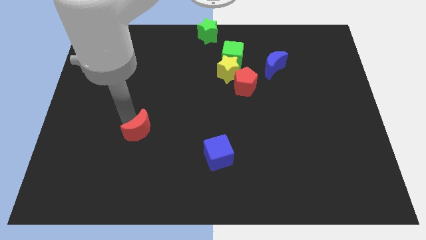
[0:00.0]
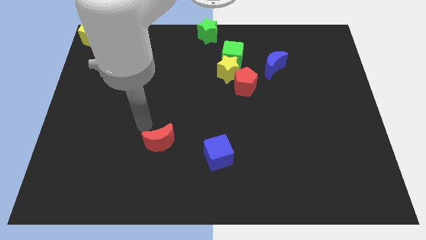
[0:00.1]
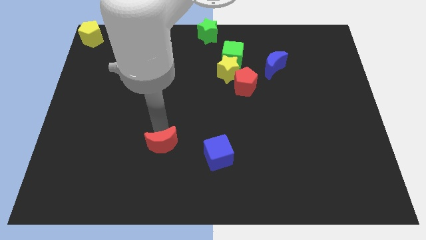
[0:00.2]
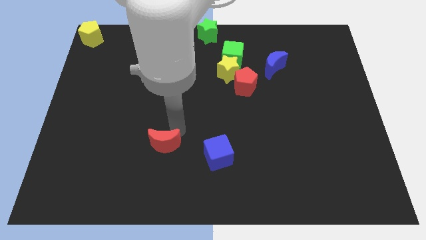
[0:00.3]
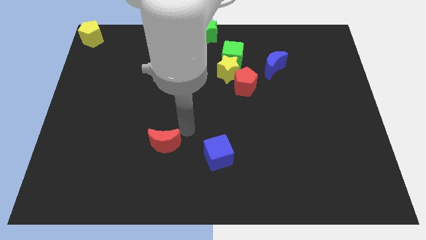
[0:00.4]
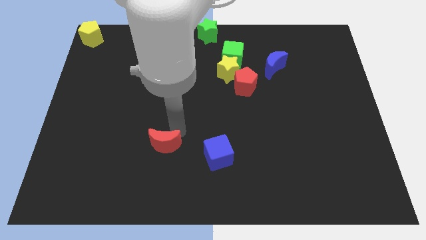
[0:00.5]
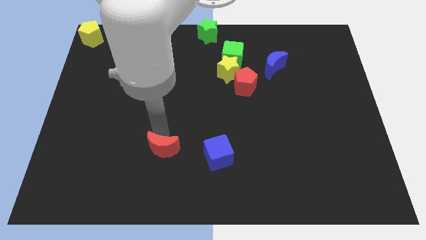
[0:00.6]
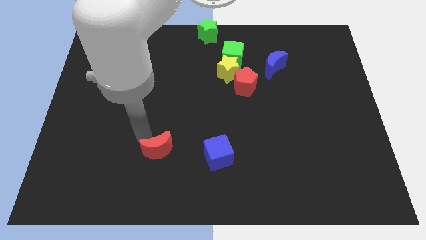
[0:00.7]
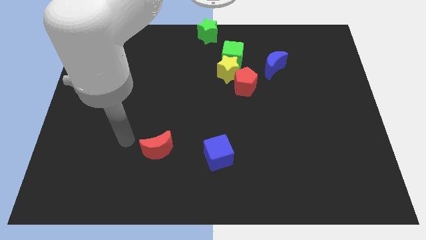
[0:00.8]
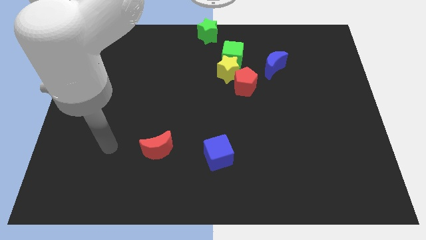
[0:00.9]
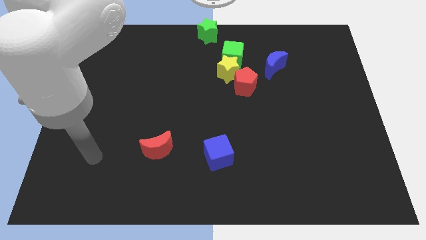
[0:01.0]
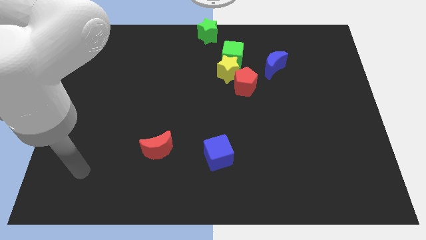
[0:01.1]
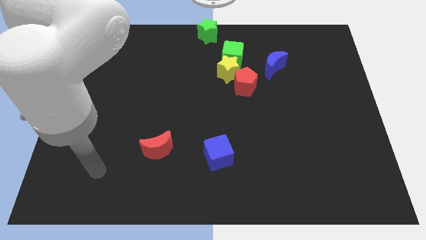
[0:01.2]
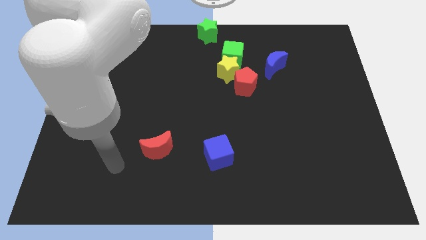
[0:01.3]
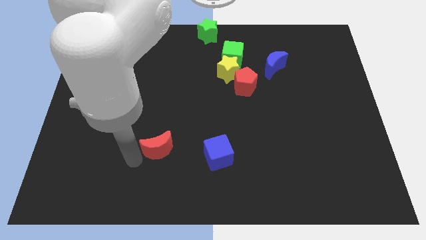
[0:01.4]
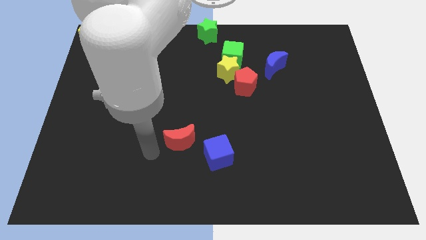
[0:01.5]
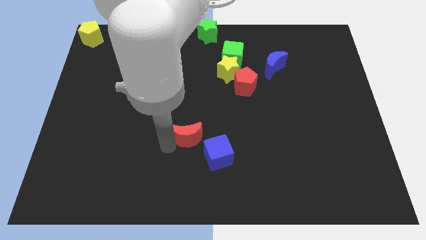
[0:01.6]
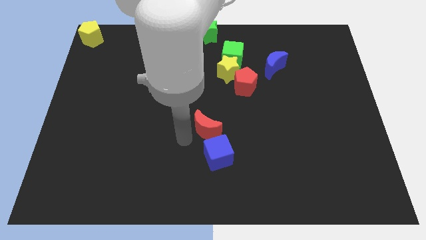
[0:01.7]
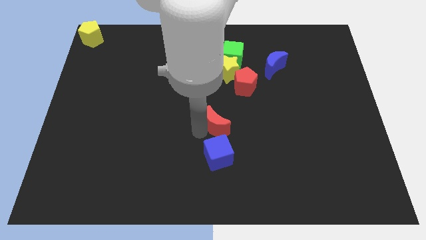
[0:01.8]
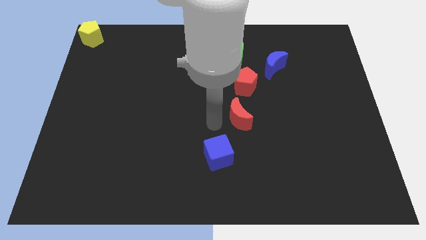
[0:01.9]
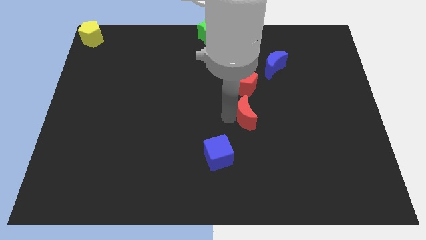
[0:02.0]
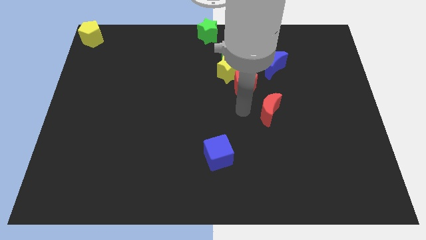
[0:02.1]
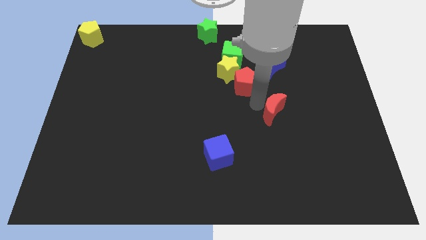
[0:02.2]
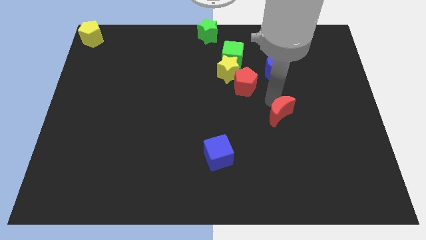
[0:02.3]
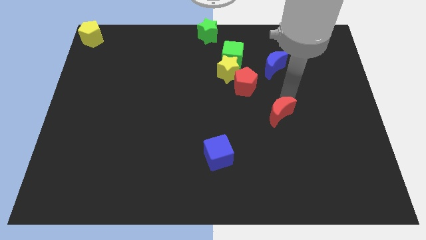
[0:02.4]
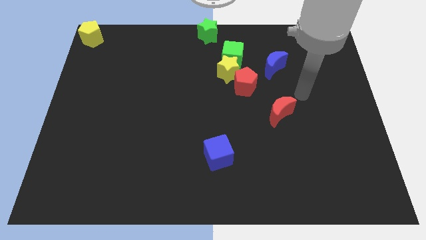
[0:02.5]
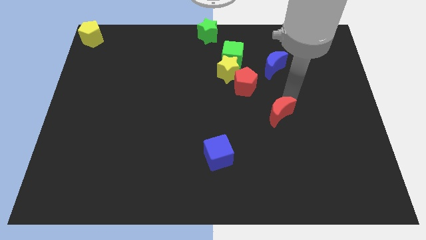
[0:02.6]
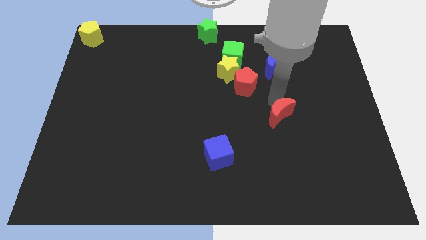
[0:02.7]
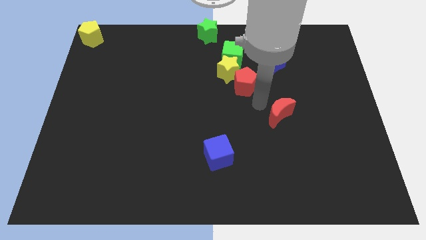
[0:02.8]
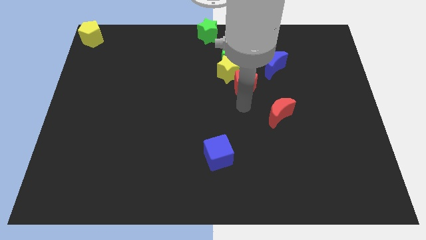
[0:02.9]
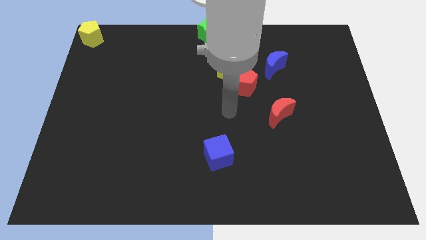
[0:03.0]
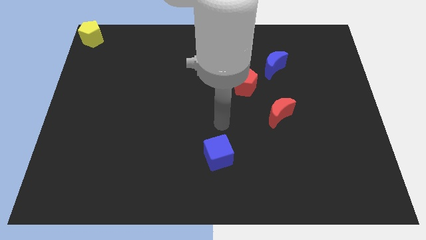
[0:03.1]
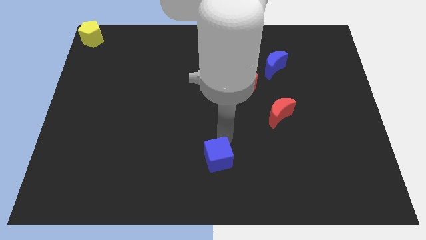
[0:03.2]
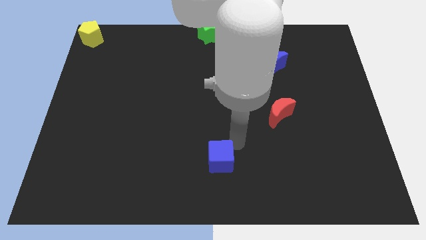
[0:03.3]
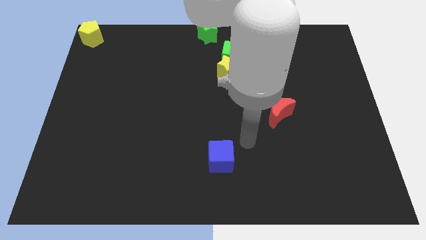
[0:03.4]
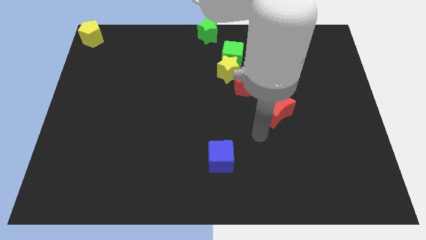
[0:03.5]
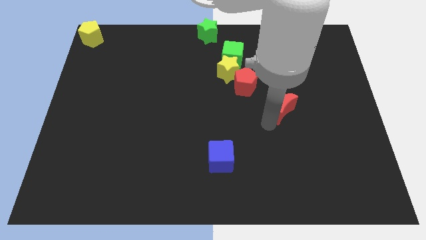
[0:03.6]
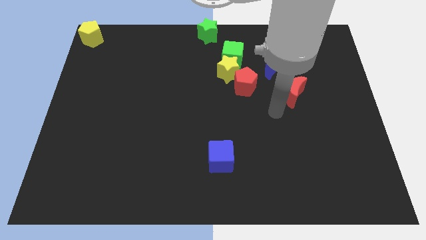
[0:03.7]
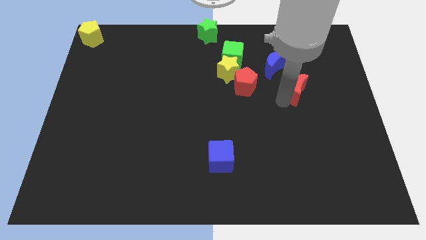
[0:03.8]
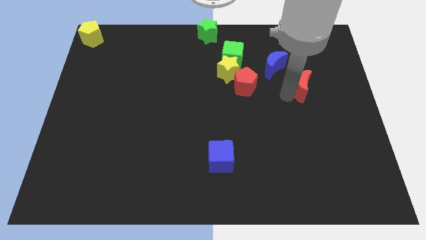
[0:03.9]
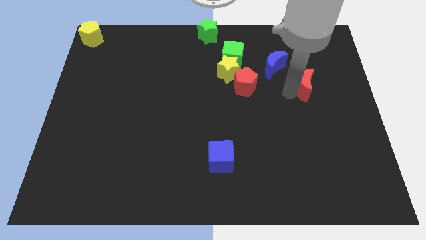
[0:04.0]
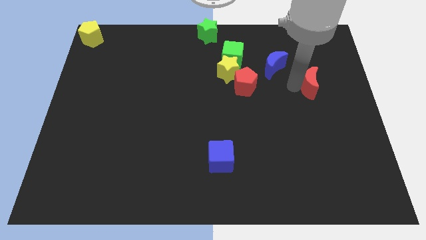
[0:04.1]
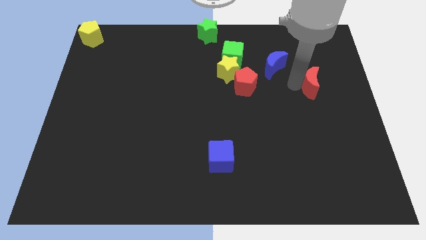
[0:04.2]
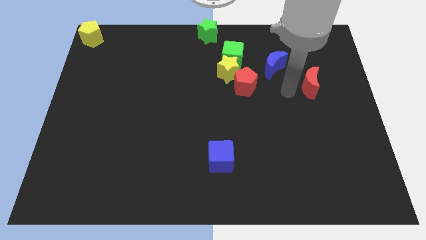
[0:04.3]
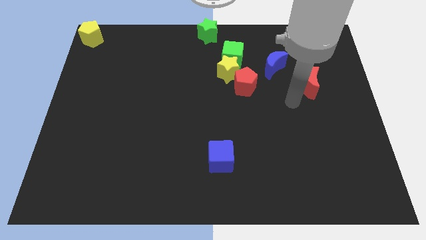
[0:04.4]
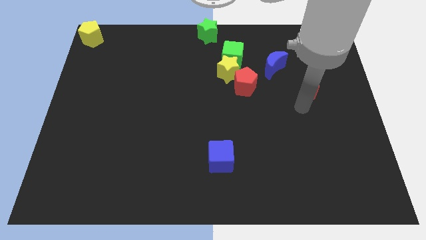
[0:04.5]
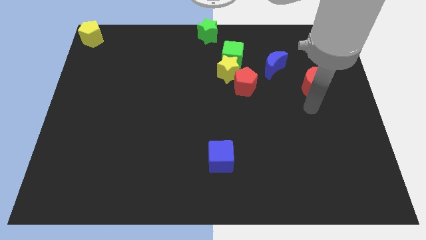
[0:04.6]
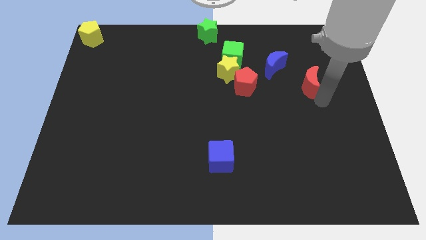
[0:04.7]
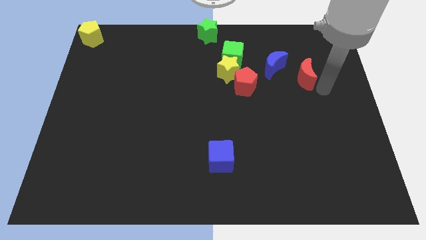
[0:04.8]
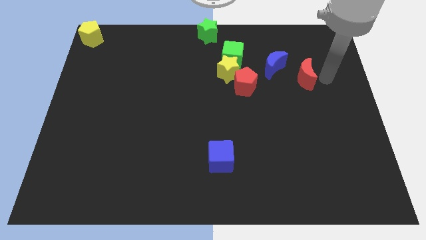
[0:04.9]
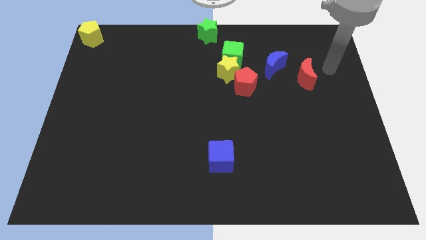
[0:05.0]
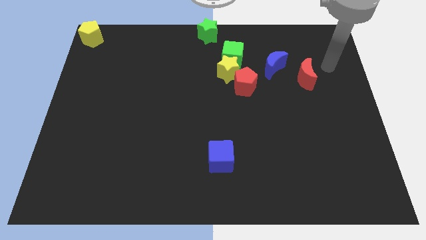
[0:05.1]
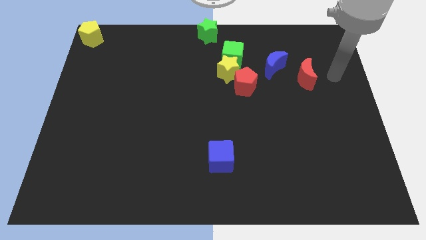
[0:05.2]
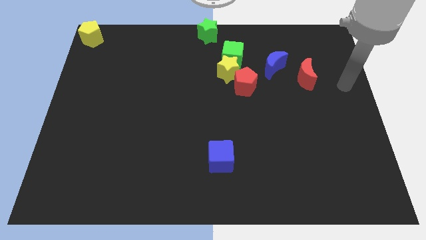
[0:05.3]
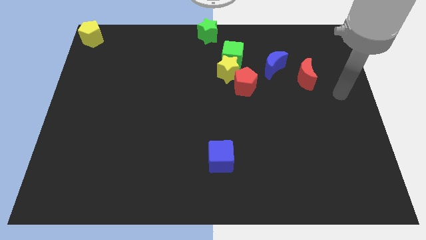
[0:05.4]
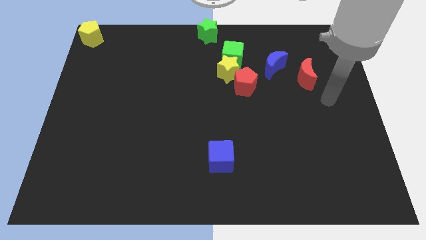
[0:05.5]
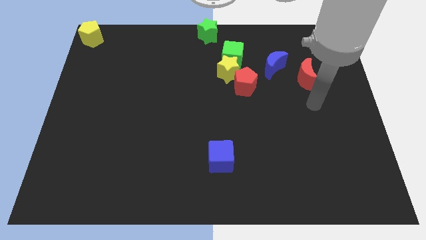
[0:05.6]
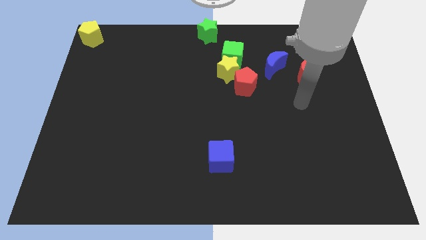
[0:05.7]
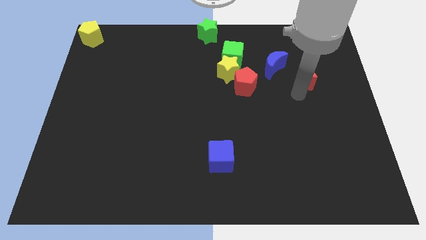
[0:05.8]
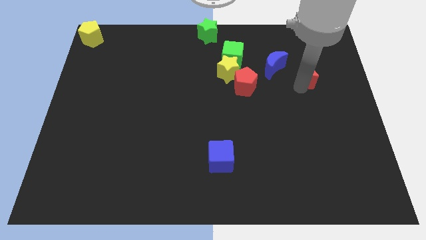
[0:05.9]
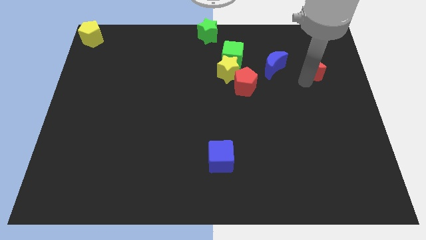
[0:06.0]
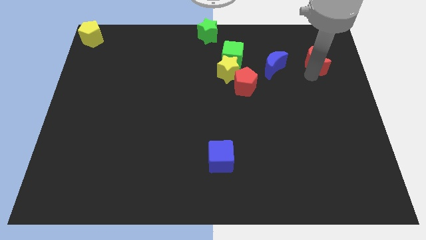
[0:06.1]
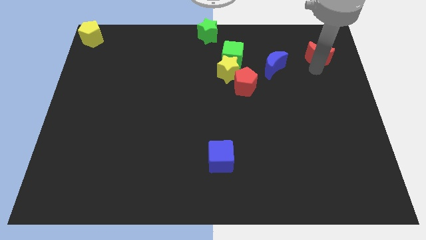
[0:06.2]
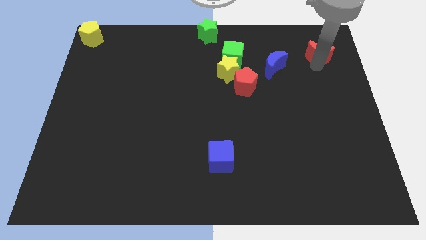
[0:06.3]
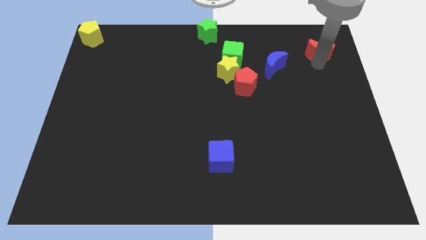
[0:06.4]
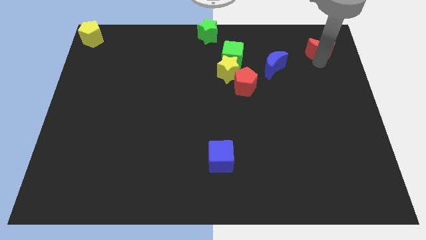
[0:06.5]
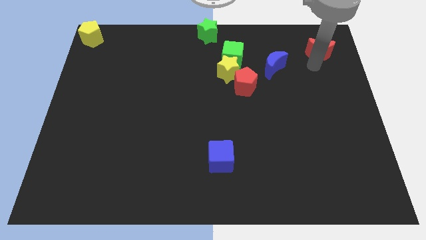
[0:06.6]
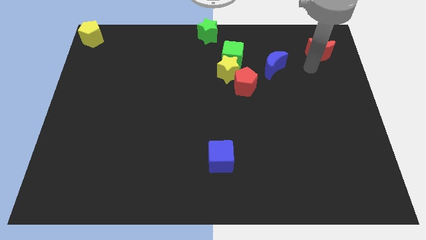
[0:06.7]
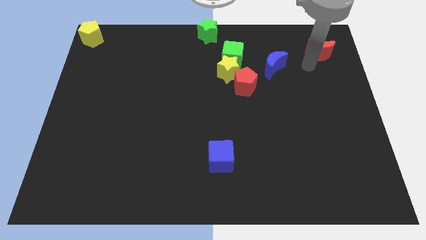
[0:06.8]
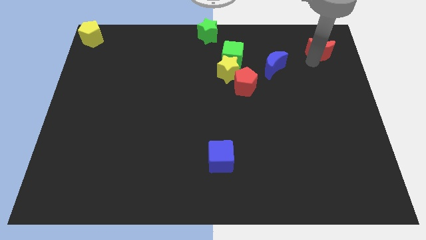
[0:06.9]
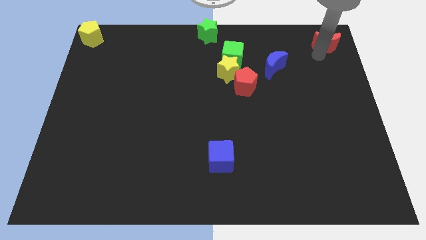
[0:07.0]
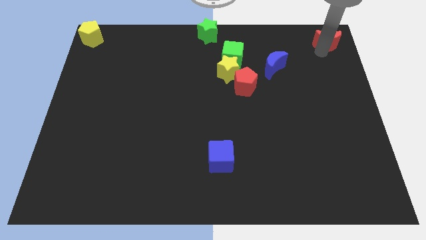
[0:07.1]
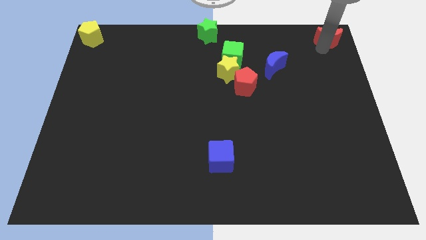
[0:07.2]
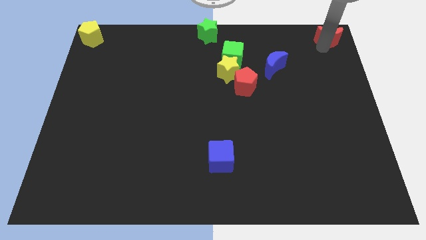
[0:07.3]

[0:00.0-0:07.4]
push the red crescent to the top right of the board

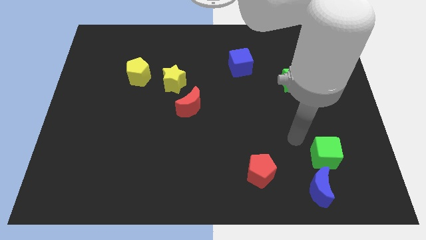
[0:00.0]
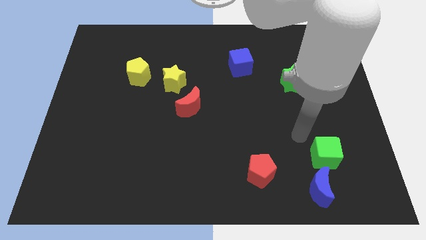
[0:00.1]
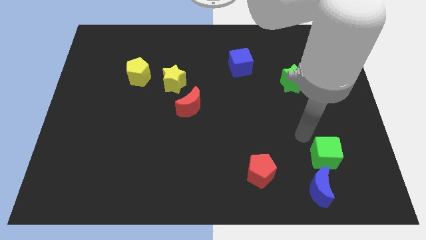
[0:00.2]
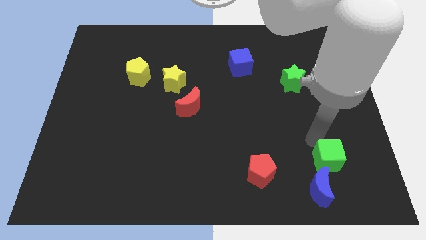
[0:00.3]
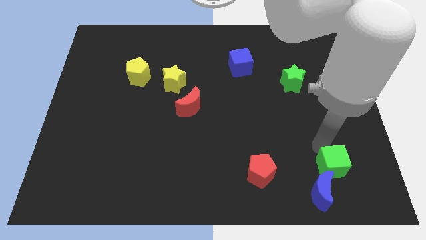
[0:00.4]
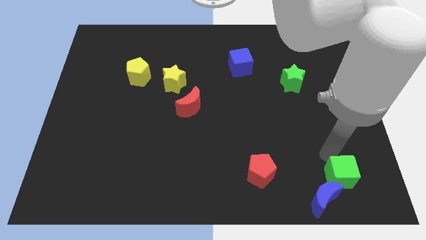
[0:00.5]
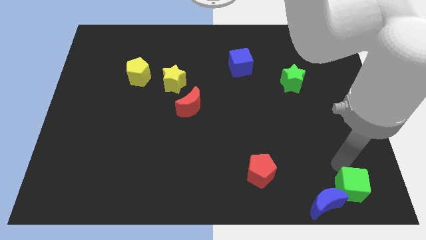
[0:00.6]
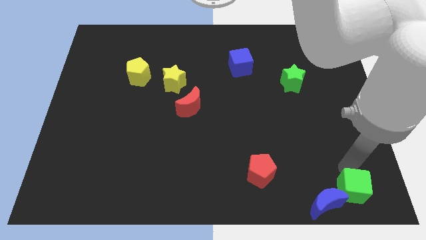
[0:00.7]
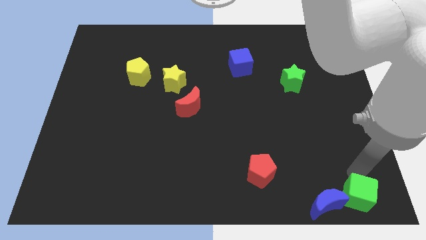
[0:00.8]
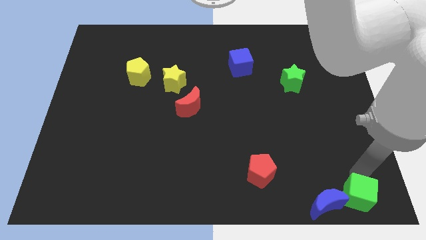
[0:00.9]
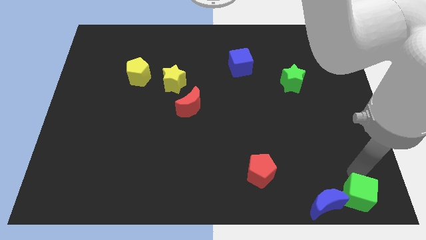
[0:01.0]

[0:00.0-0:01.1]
push the green cube in to the blue crescent

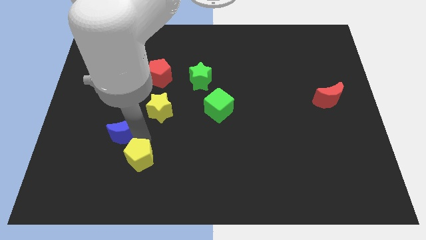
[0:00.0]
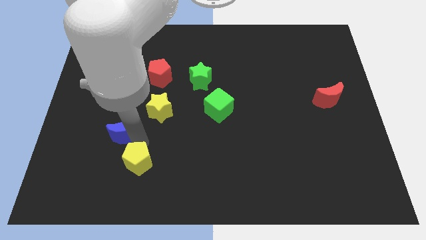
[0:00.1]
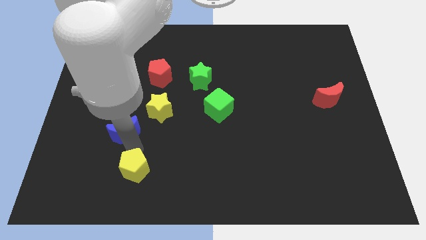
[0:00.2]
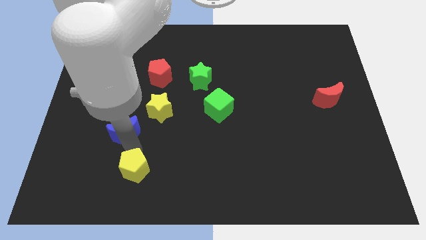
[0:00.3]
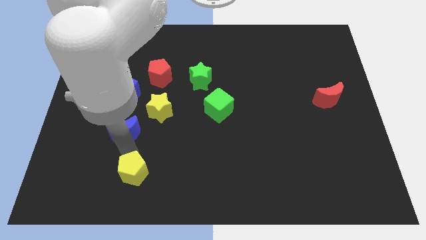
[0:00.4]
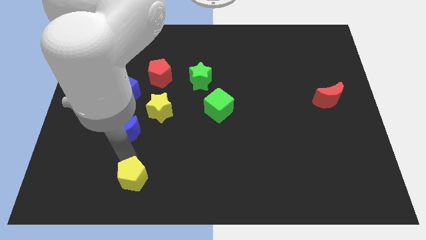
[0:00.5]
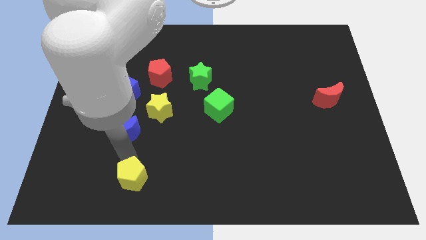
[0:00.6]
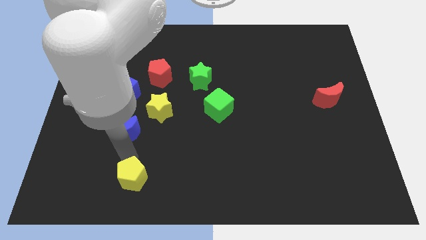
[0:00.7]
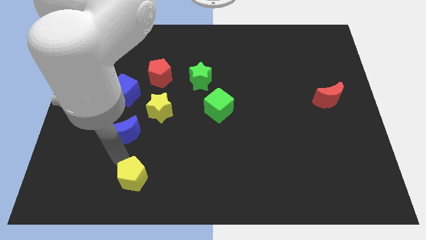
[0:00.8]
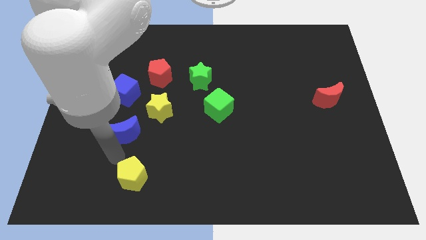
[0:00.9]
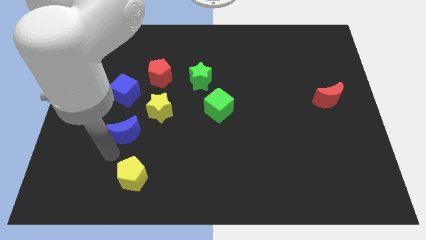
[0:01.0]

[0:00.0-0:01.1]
move the yellow pentgaon to the bottom center
